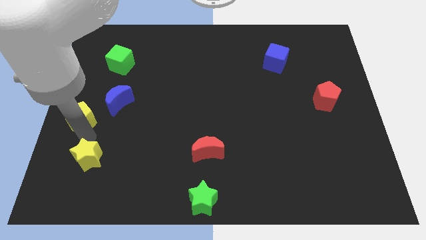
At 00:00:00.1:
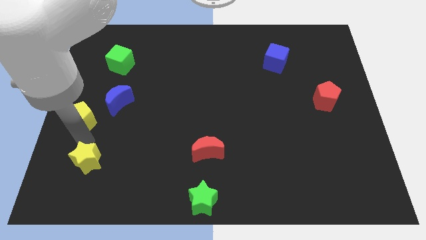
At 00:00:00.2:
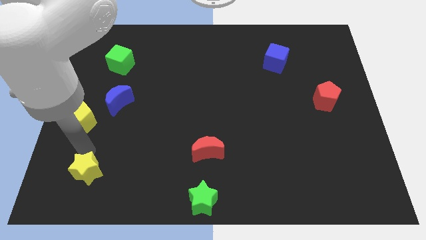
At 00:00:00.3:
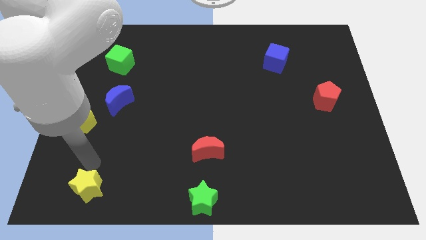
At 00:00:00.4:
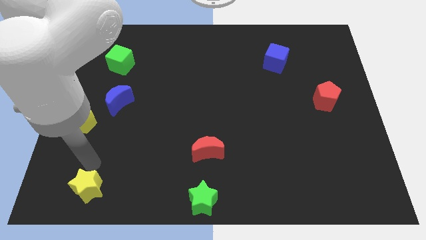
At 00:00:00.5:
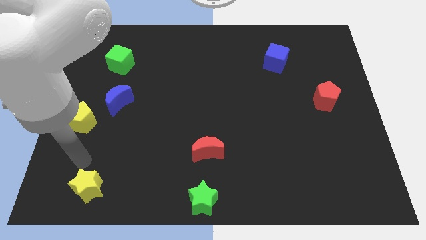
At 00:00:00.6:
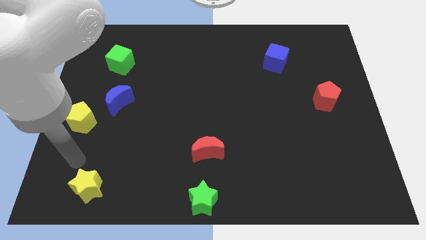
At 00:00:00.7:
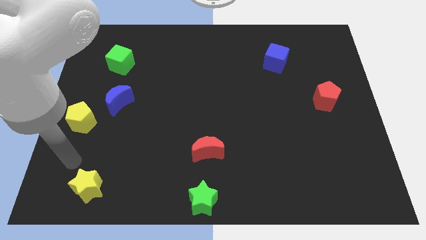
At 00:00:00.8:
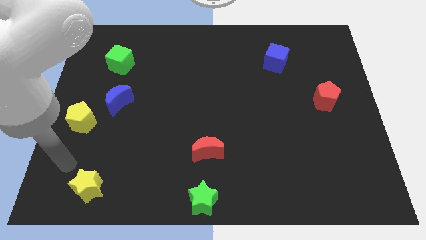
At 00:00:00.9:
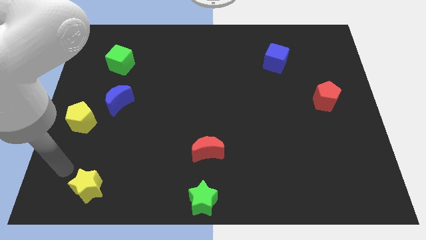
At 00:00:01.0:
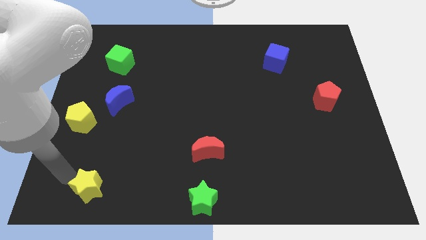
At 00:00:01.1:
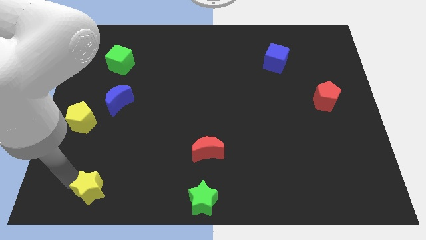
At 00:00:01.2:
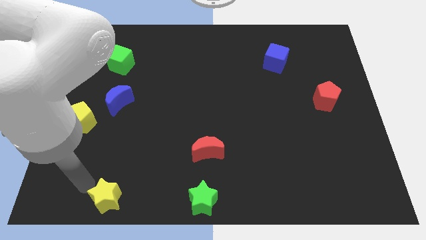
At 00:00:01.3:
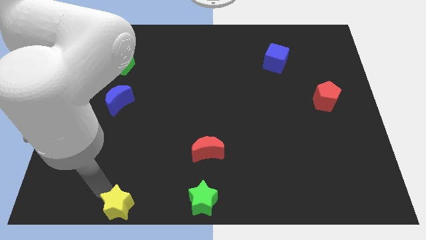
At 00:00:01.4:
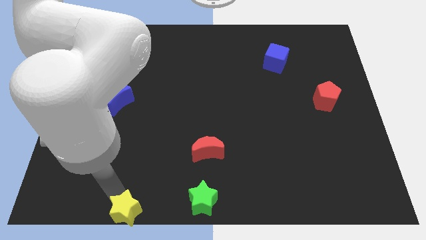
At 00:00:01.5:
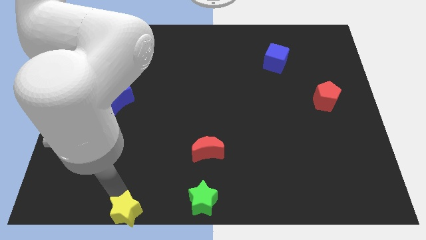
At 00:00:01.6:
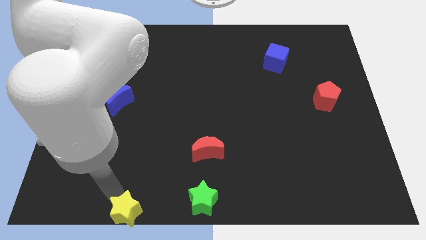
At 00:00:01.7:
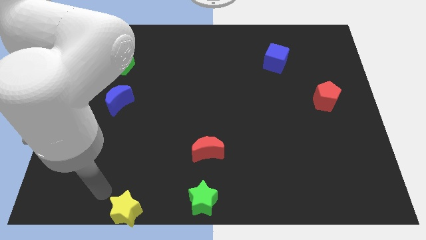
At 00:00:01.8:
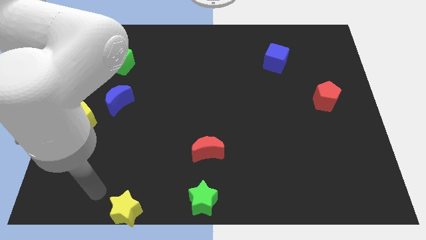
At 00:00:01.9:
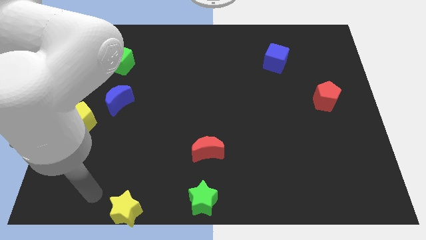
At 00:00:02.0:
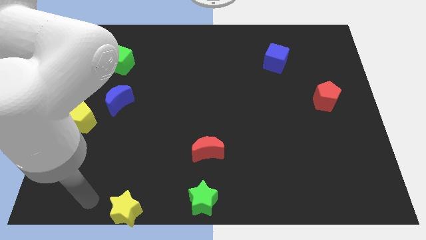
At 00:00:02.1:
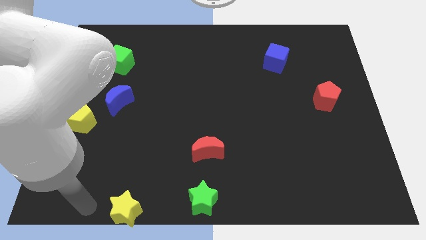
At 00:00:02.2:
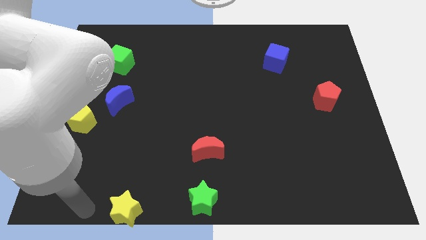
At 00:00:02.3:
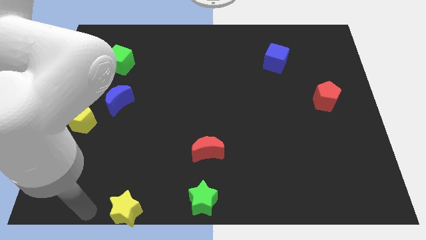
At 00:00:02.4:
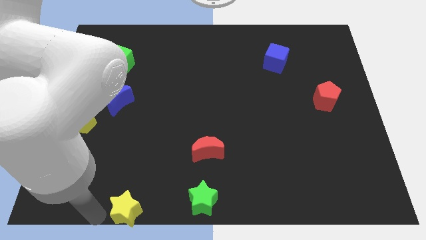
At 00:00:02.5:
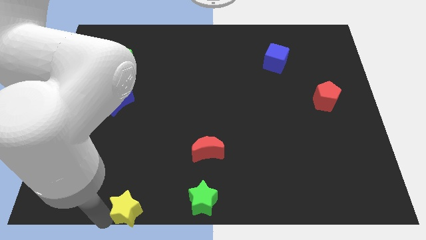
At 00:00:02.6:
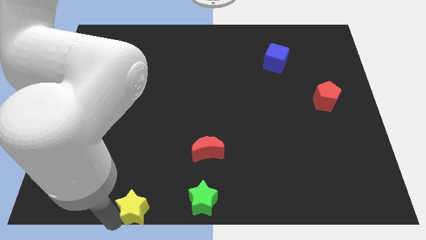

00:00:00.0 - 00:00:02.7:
place the yellow star to the left of the green star

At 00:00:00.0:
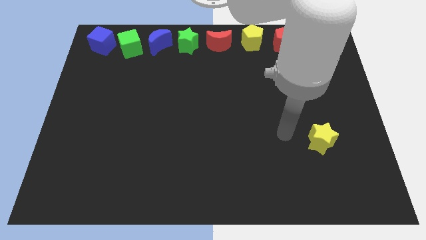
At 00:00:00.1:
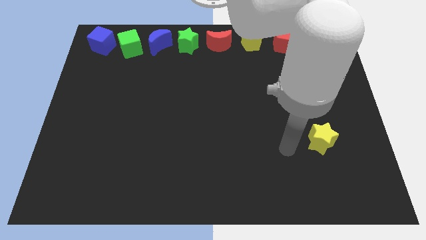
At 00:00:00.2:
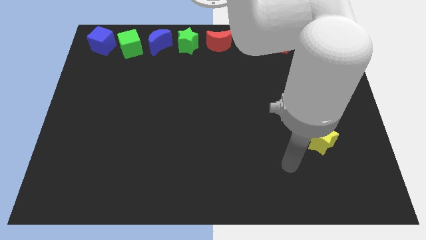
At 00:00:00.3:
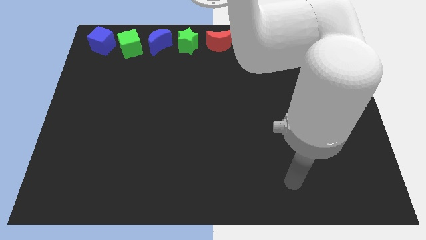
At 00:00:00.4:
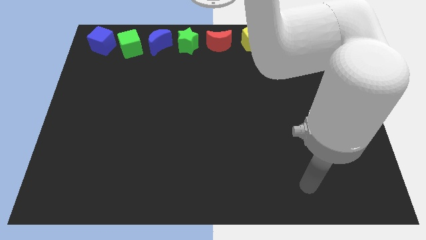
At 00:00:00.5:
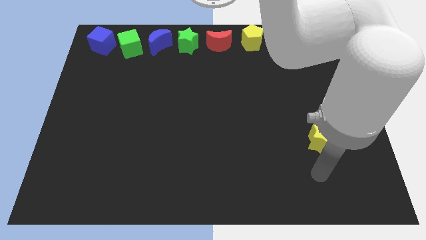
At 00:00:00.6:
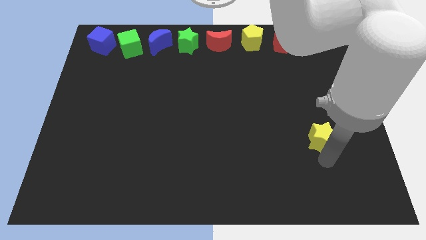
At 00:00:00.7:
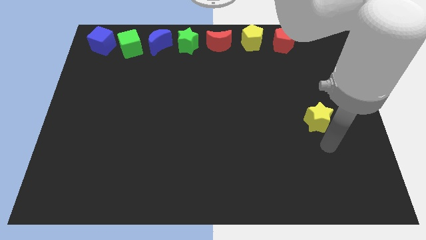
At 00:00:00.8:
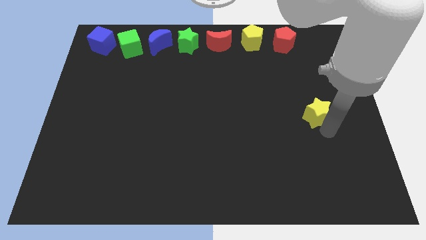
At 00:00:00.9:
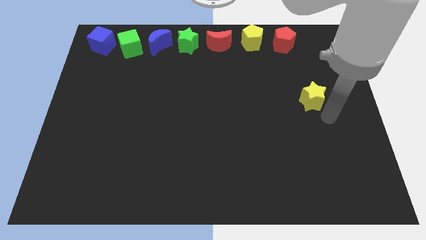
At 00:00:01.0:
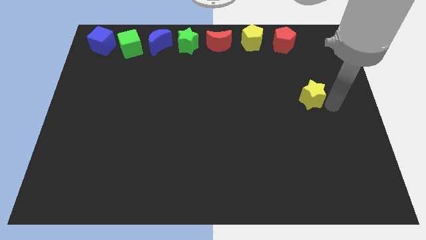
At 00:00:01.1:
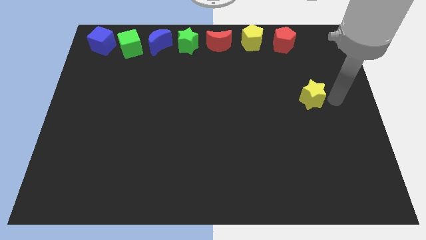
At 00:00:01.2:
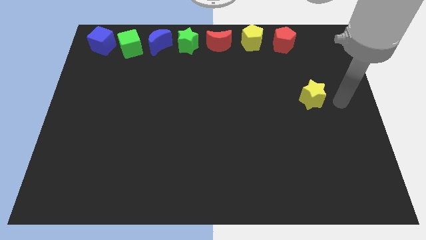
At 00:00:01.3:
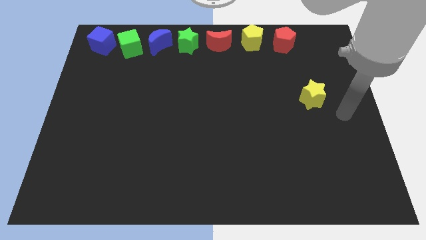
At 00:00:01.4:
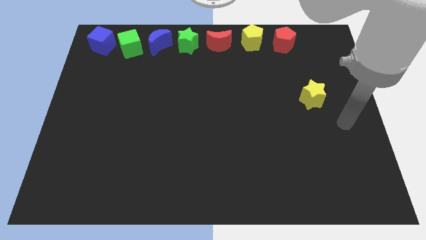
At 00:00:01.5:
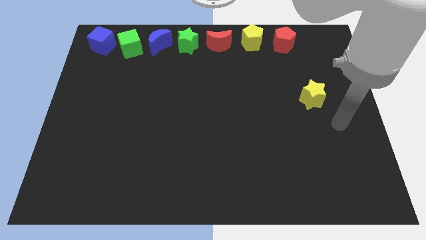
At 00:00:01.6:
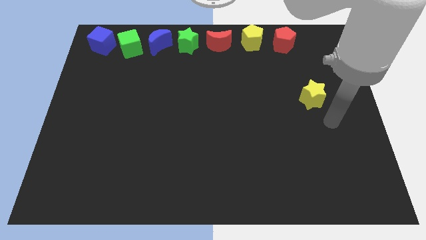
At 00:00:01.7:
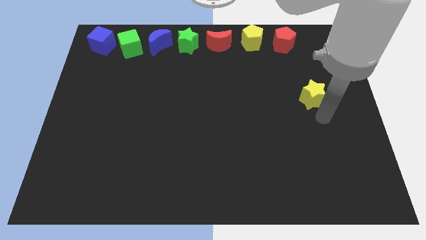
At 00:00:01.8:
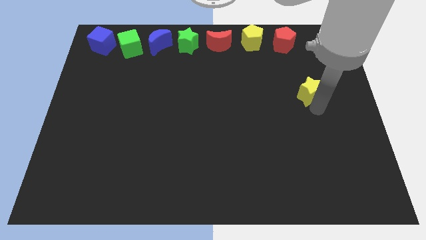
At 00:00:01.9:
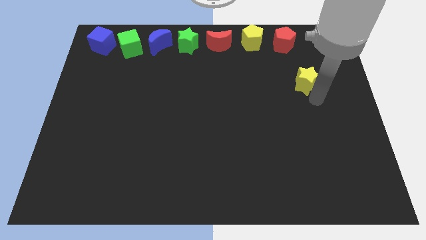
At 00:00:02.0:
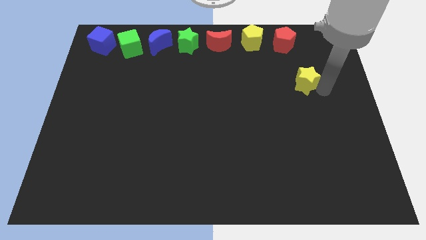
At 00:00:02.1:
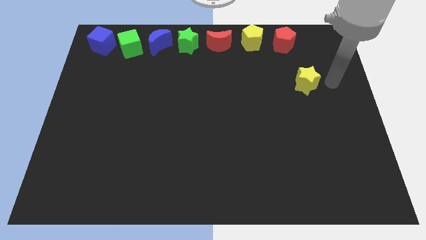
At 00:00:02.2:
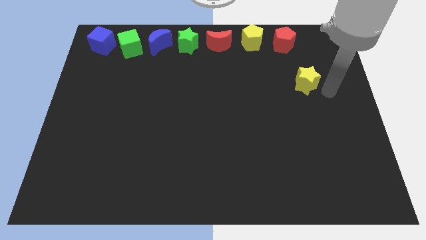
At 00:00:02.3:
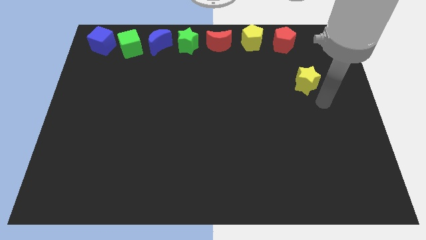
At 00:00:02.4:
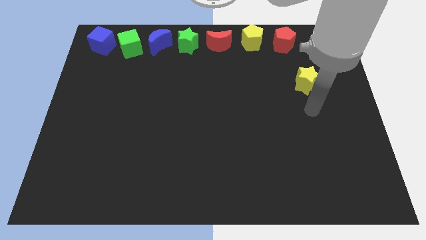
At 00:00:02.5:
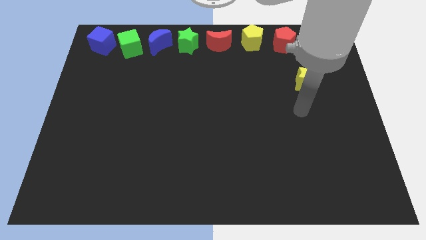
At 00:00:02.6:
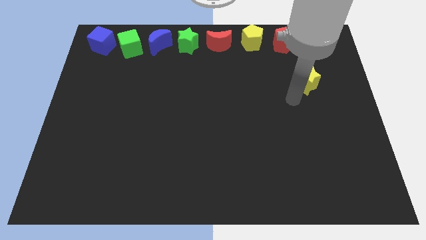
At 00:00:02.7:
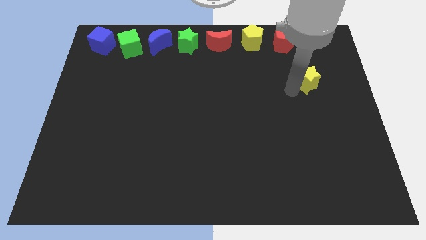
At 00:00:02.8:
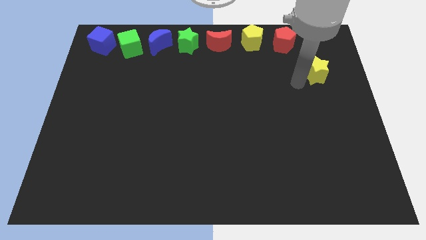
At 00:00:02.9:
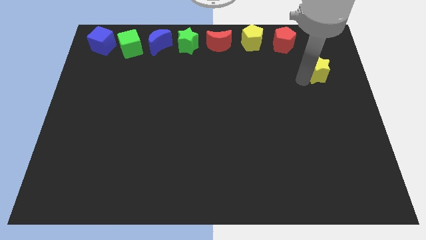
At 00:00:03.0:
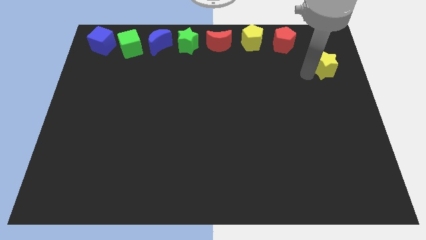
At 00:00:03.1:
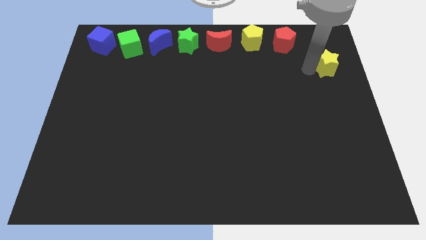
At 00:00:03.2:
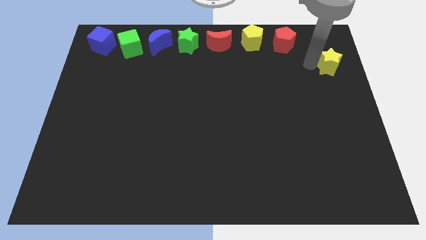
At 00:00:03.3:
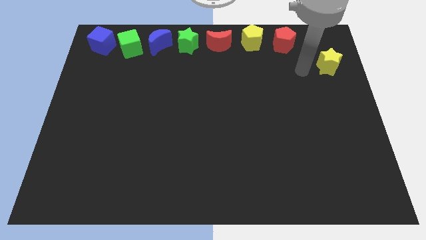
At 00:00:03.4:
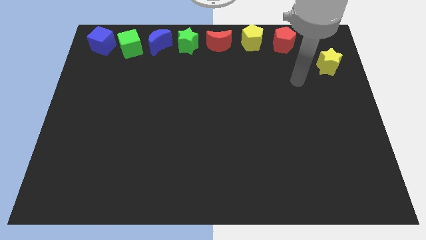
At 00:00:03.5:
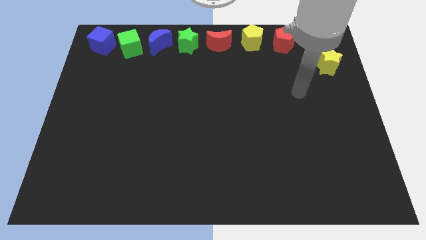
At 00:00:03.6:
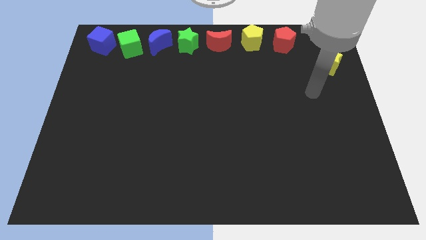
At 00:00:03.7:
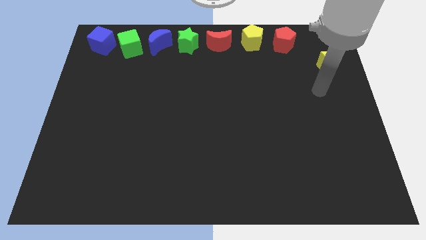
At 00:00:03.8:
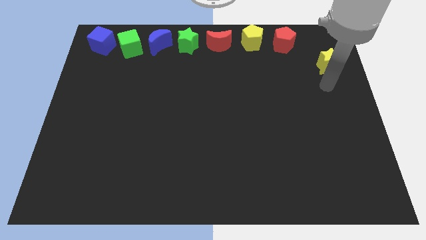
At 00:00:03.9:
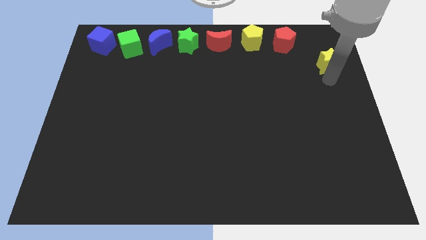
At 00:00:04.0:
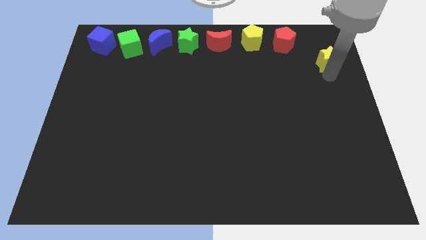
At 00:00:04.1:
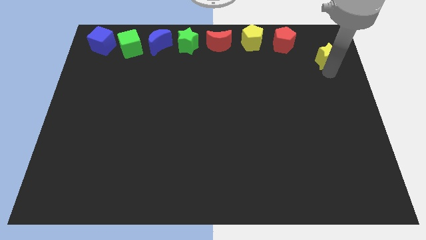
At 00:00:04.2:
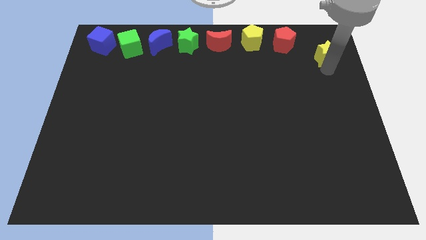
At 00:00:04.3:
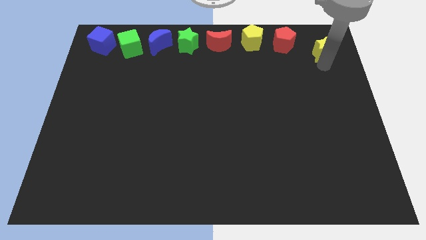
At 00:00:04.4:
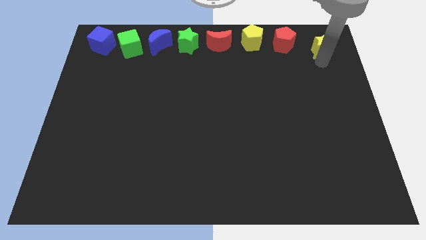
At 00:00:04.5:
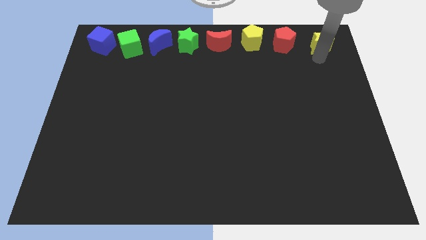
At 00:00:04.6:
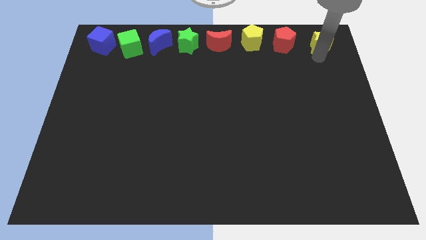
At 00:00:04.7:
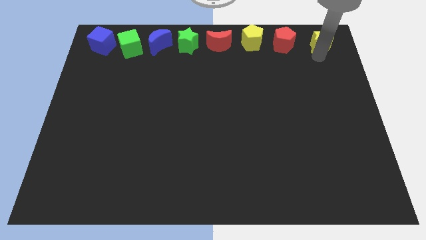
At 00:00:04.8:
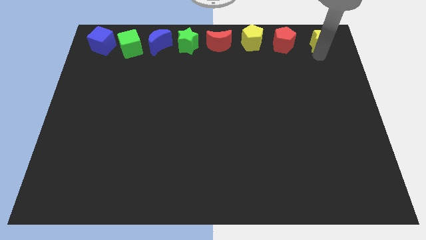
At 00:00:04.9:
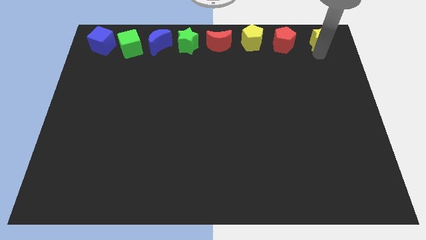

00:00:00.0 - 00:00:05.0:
place yellow star beside red pentagon

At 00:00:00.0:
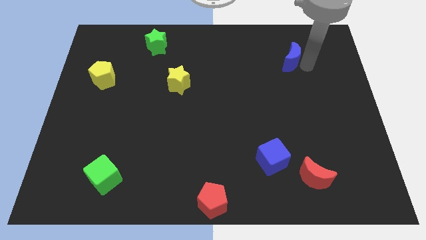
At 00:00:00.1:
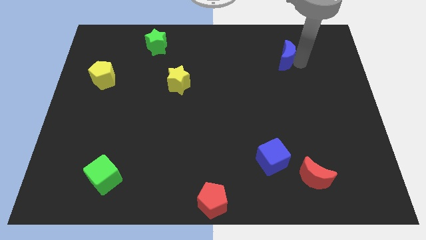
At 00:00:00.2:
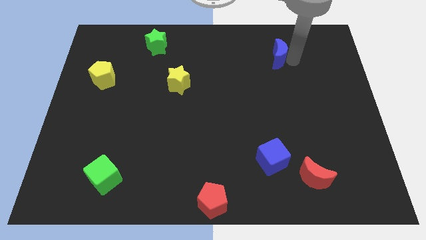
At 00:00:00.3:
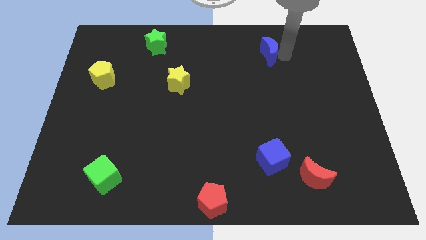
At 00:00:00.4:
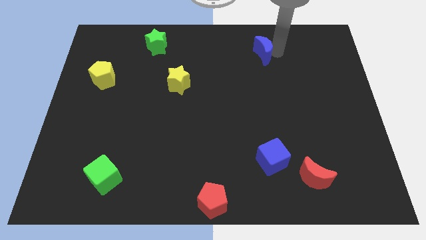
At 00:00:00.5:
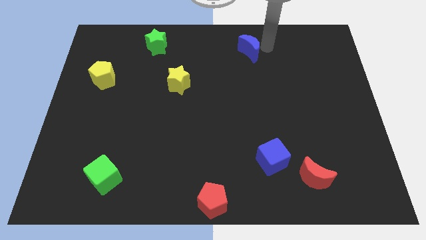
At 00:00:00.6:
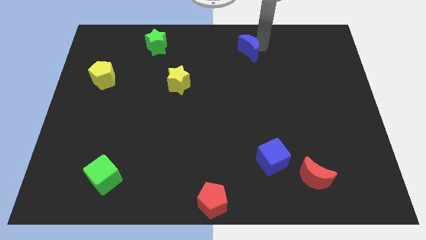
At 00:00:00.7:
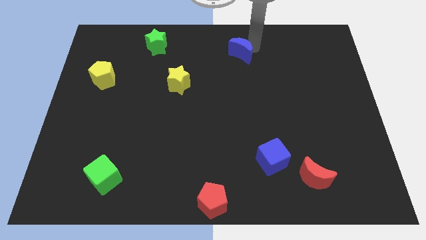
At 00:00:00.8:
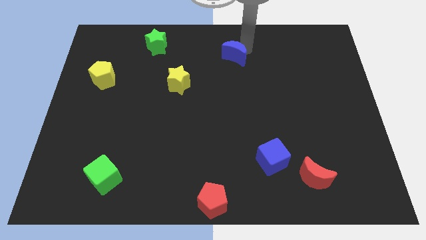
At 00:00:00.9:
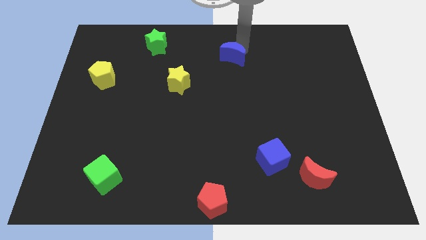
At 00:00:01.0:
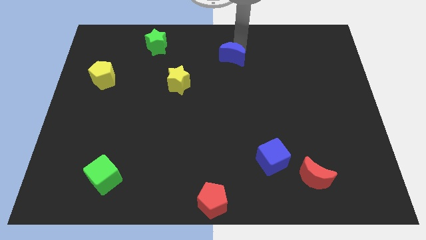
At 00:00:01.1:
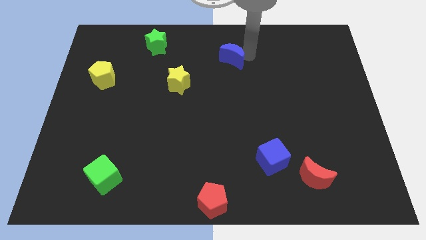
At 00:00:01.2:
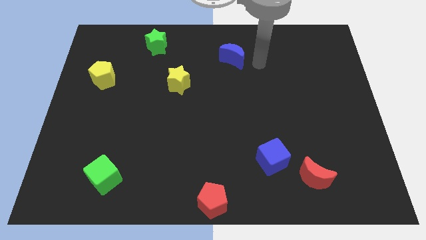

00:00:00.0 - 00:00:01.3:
place the blue crescent diagonally above the top right side of the yellow star
